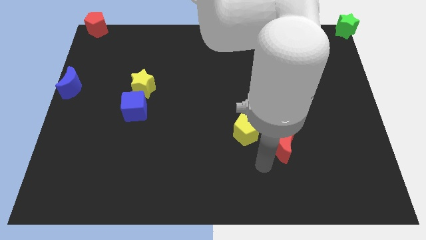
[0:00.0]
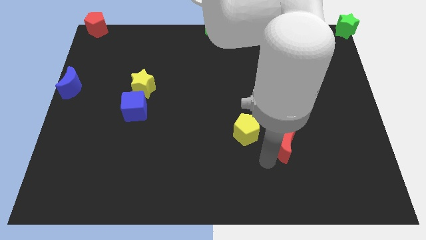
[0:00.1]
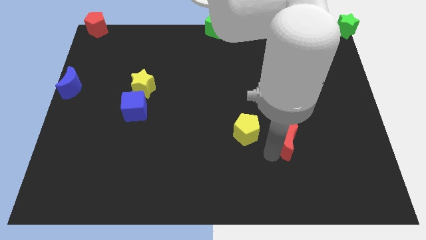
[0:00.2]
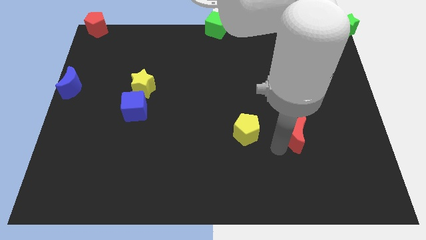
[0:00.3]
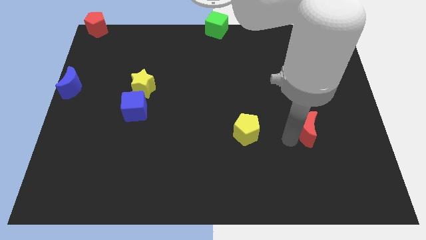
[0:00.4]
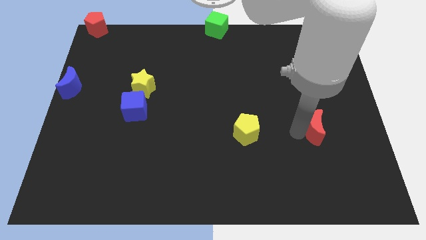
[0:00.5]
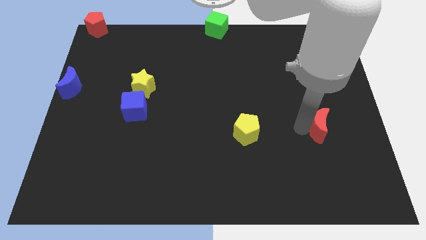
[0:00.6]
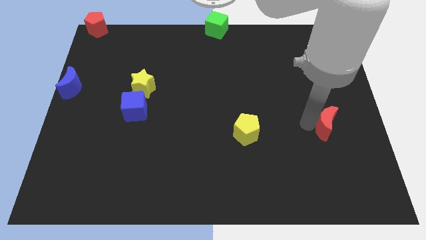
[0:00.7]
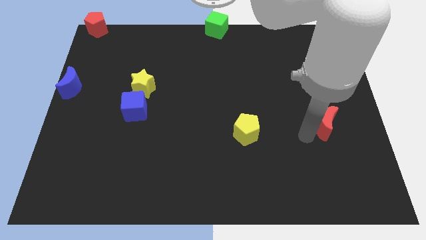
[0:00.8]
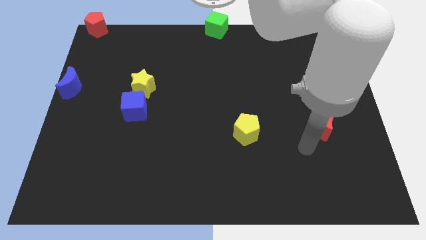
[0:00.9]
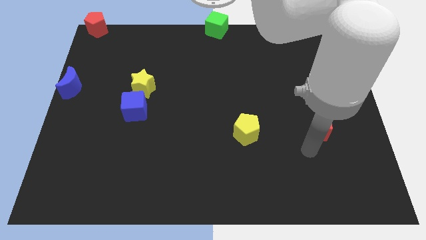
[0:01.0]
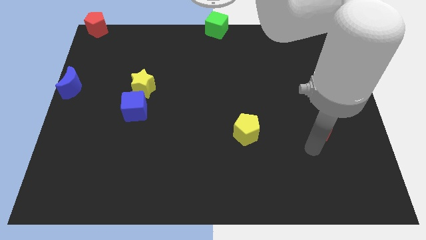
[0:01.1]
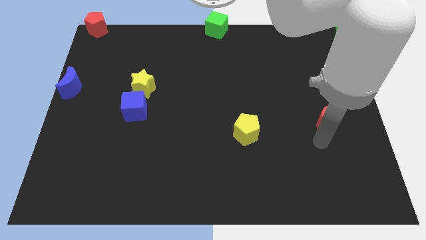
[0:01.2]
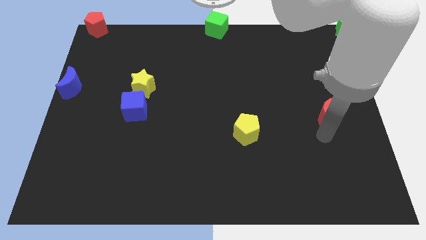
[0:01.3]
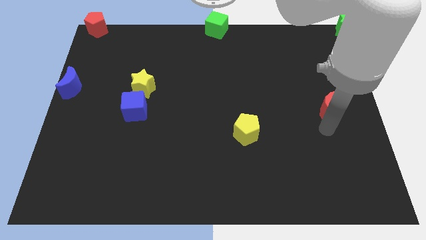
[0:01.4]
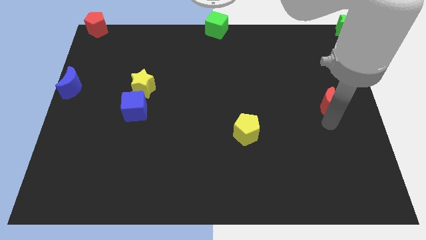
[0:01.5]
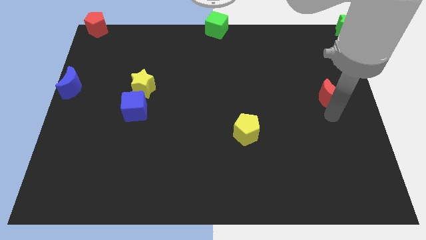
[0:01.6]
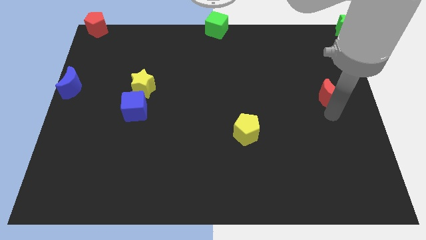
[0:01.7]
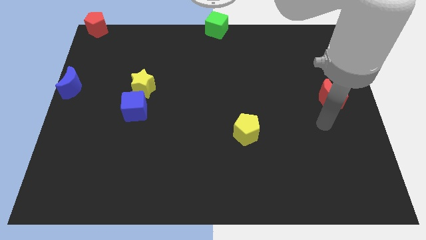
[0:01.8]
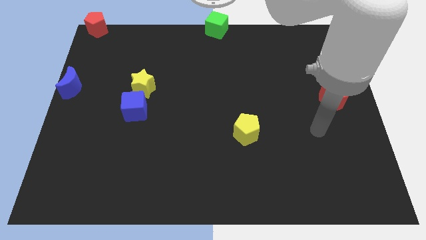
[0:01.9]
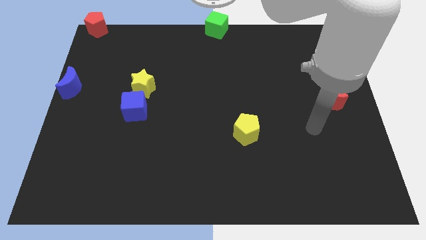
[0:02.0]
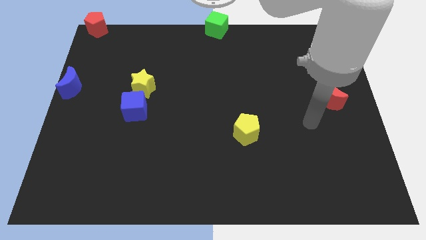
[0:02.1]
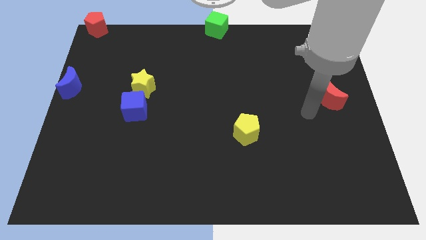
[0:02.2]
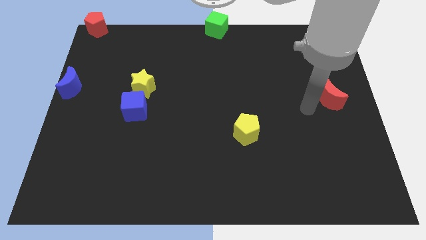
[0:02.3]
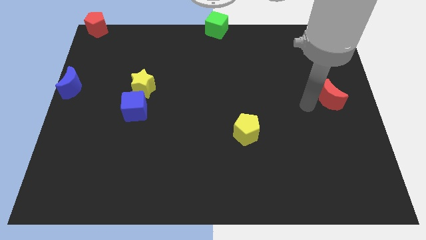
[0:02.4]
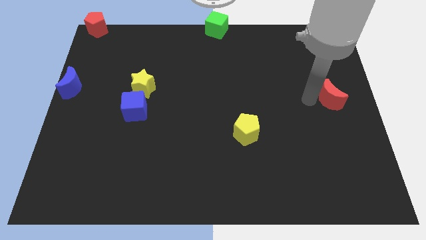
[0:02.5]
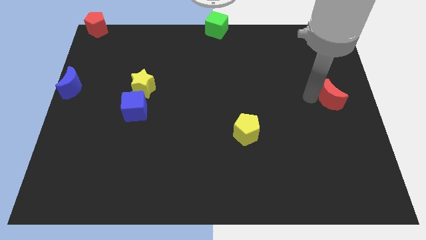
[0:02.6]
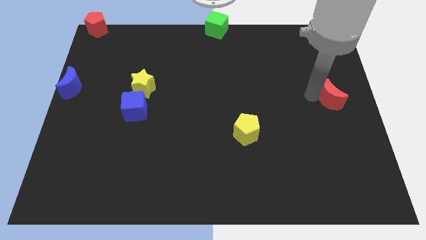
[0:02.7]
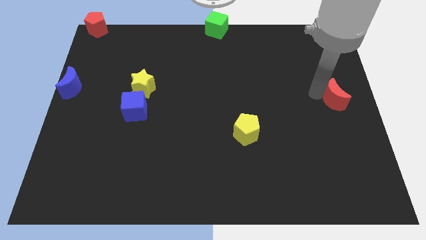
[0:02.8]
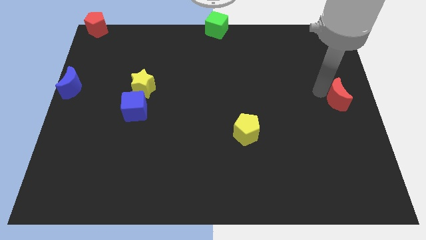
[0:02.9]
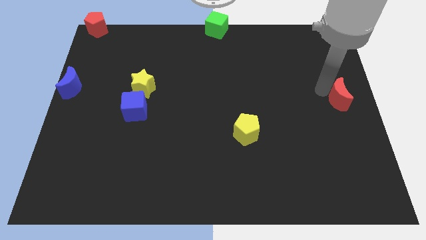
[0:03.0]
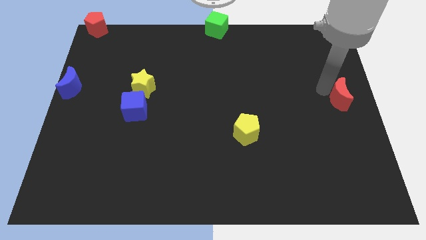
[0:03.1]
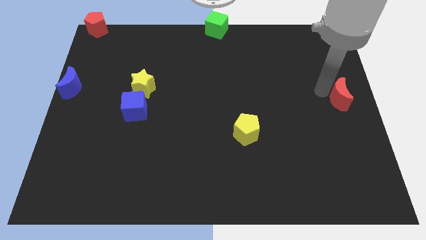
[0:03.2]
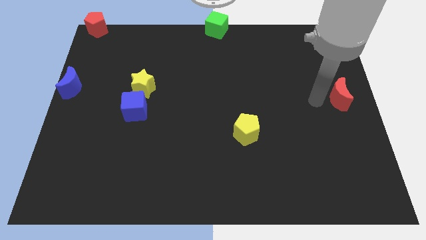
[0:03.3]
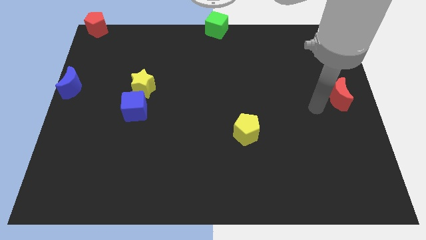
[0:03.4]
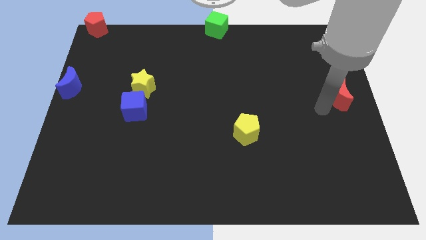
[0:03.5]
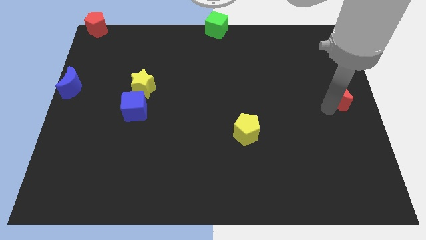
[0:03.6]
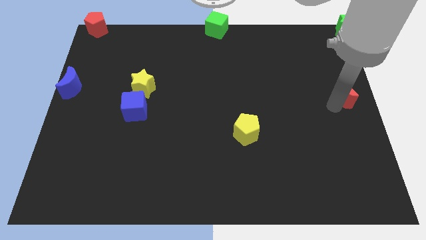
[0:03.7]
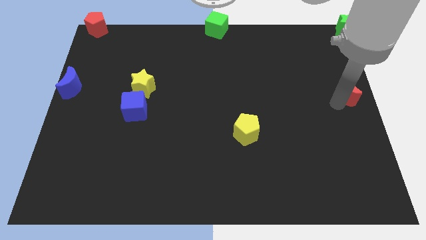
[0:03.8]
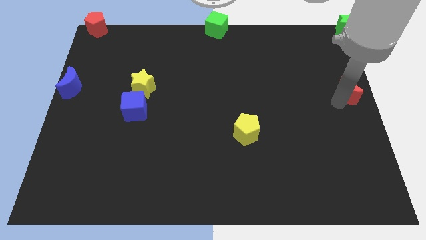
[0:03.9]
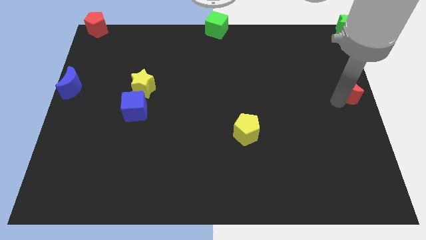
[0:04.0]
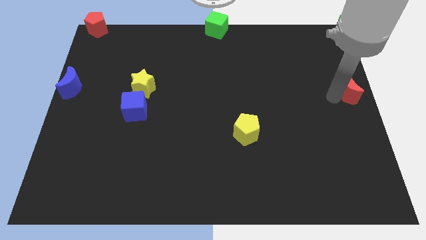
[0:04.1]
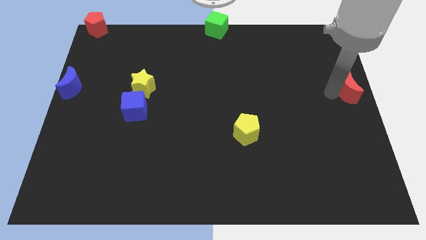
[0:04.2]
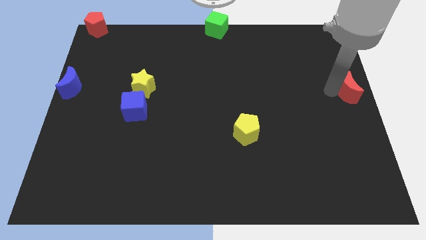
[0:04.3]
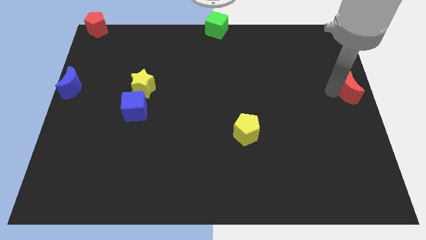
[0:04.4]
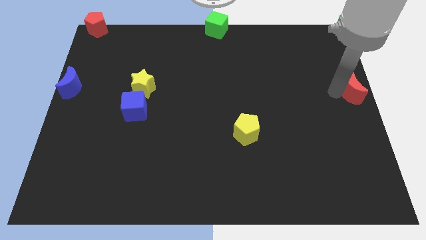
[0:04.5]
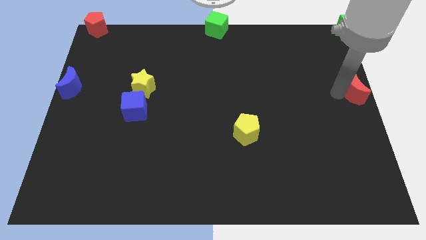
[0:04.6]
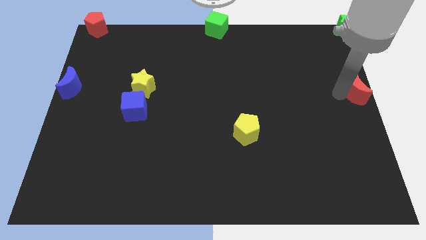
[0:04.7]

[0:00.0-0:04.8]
move the red moon to the middle right of the board

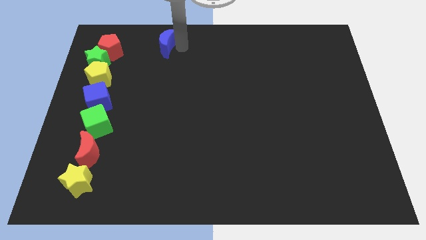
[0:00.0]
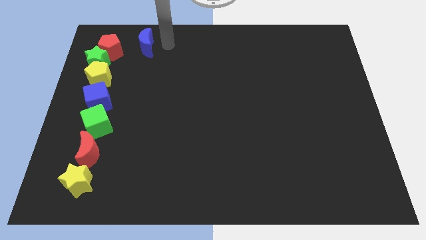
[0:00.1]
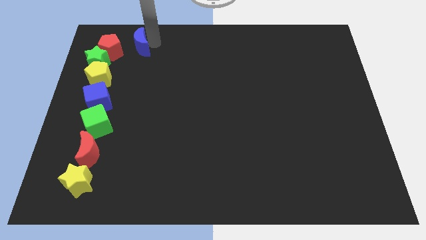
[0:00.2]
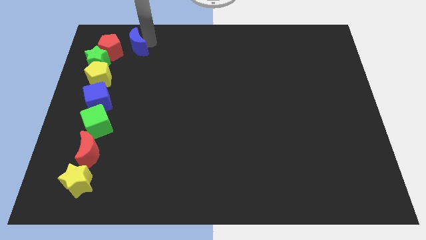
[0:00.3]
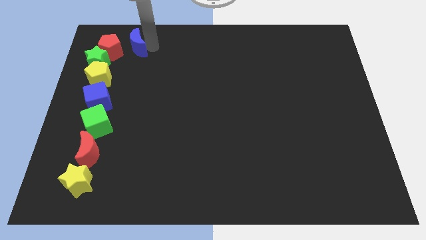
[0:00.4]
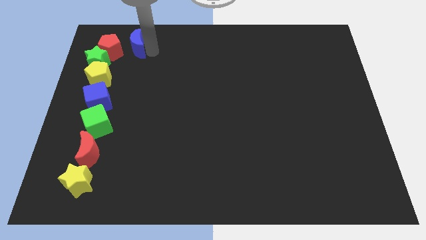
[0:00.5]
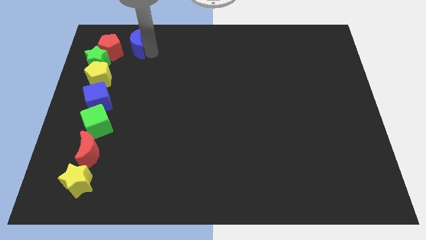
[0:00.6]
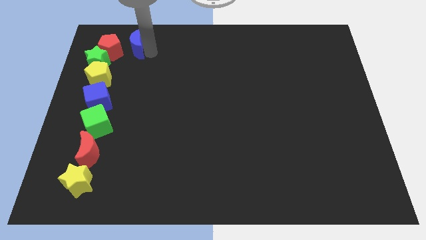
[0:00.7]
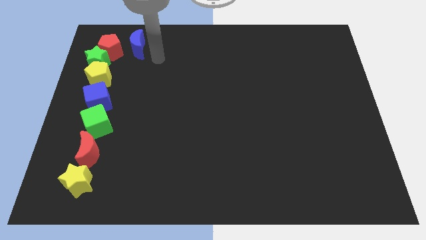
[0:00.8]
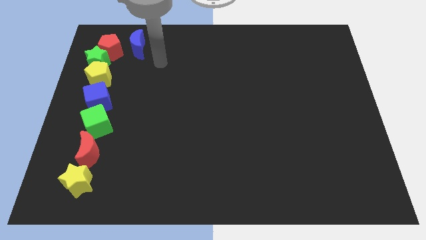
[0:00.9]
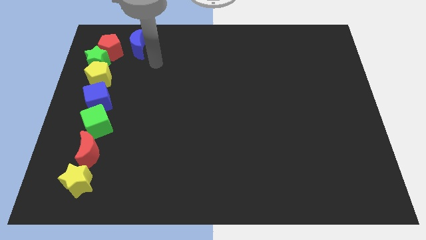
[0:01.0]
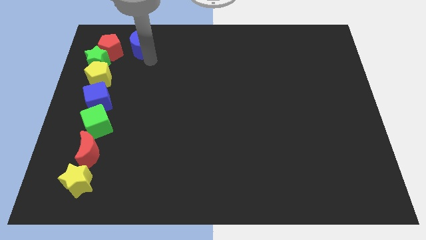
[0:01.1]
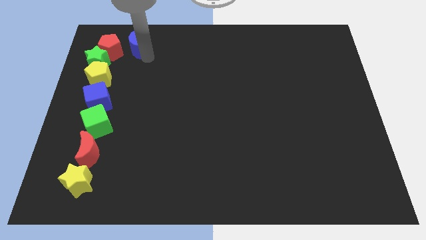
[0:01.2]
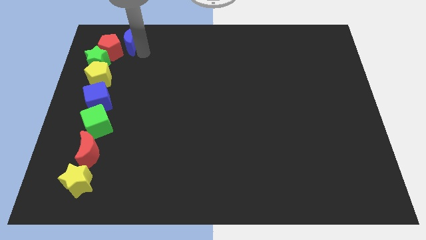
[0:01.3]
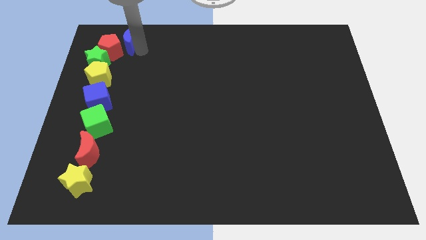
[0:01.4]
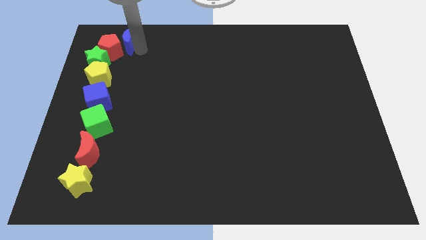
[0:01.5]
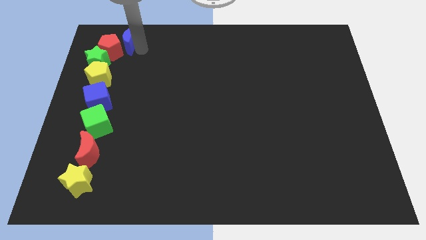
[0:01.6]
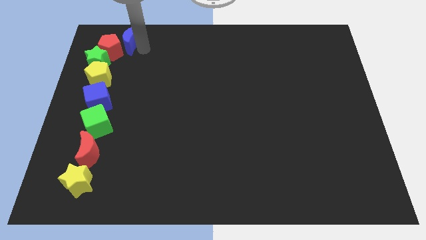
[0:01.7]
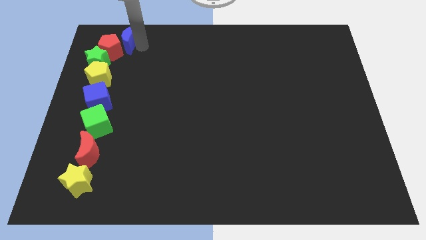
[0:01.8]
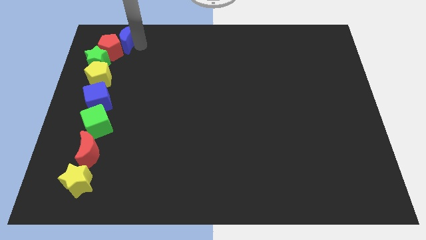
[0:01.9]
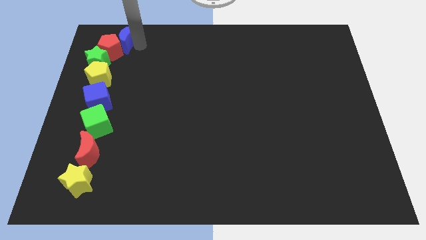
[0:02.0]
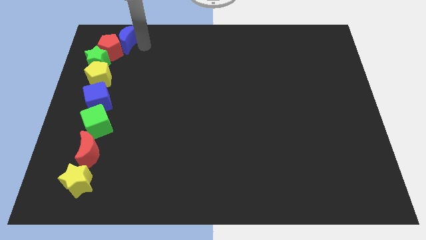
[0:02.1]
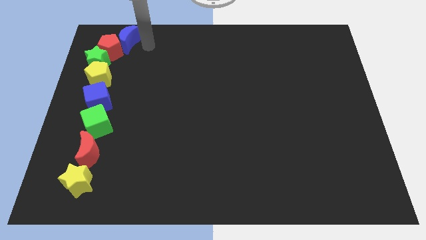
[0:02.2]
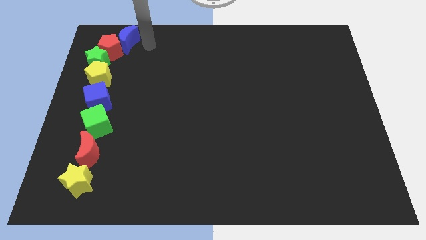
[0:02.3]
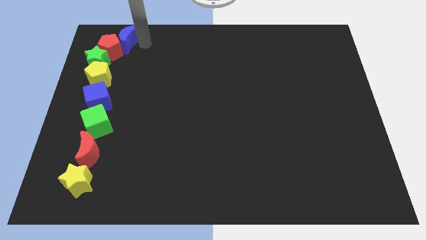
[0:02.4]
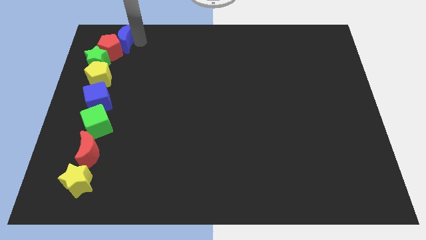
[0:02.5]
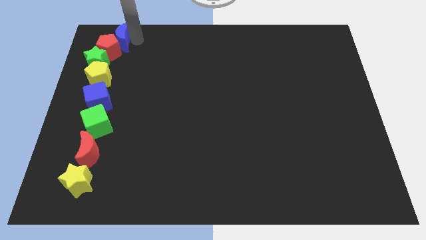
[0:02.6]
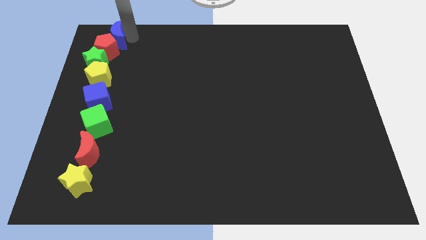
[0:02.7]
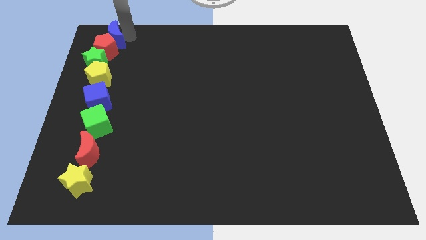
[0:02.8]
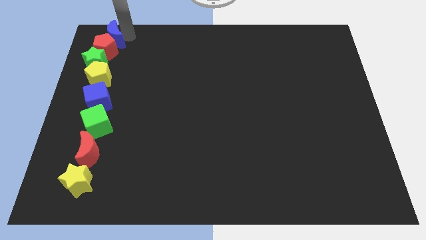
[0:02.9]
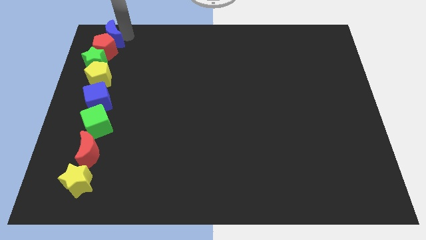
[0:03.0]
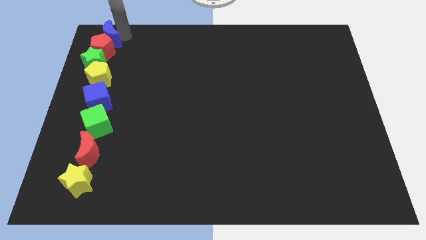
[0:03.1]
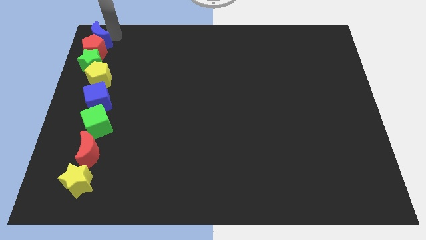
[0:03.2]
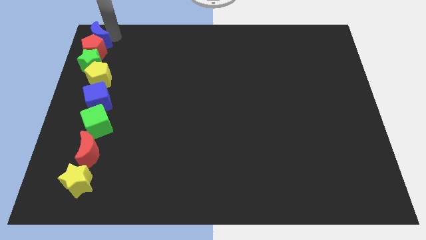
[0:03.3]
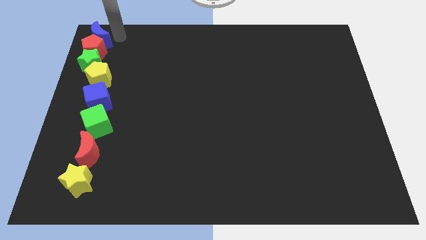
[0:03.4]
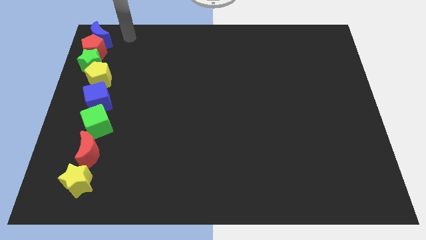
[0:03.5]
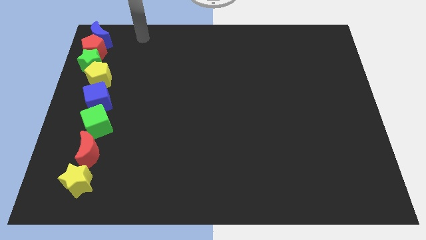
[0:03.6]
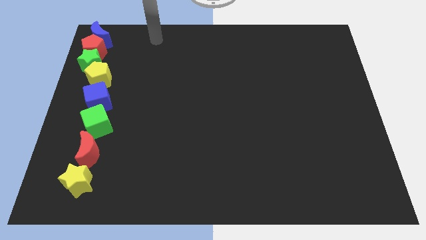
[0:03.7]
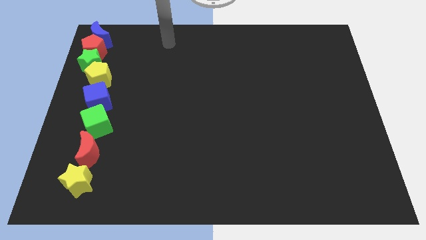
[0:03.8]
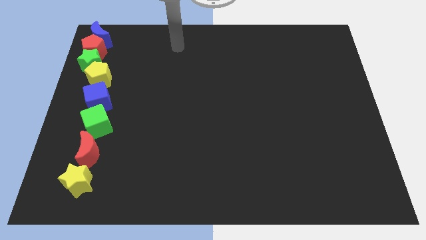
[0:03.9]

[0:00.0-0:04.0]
placed blue crescent top left of the board to form a vertical line

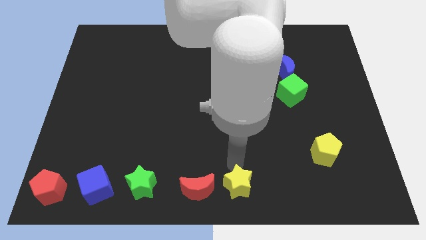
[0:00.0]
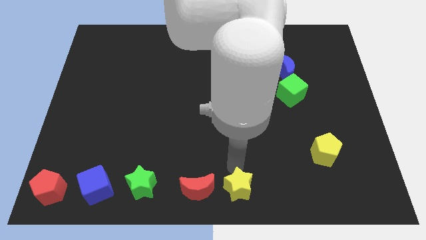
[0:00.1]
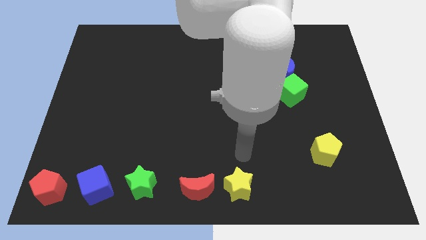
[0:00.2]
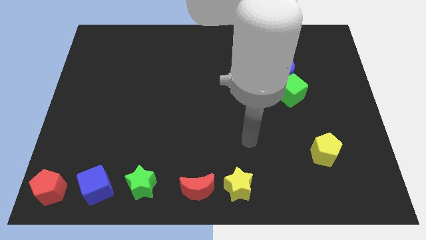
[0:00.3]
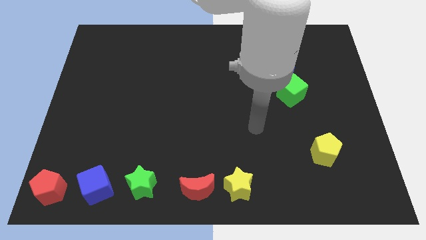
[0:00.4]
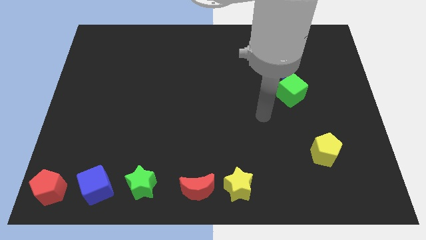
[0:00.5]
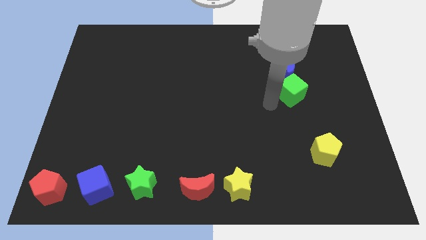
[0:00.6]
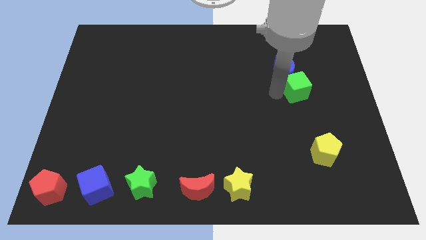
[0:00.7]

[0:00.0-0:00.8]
point your arm to the left side of green cube
